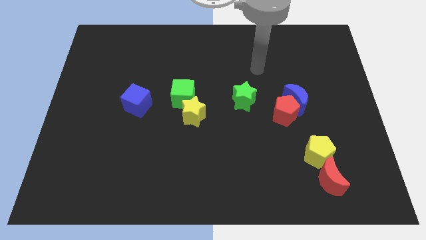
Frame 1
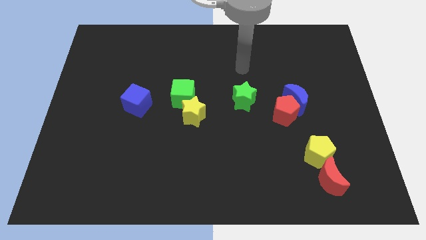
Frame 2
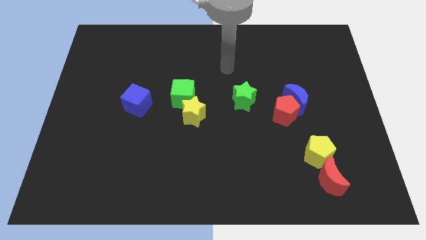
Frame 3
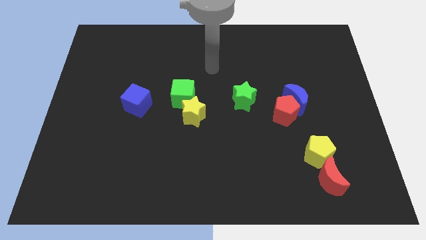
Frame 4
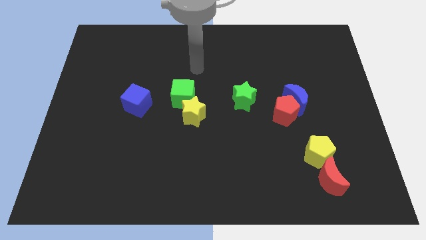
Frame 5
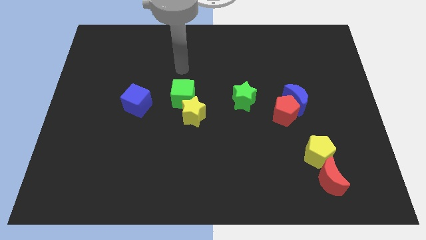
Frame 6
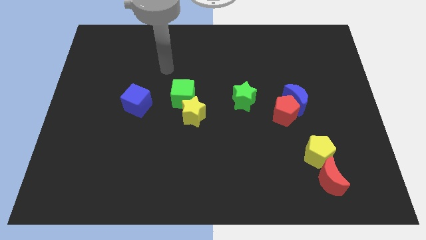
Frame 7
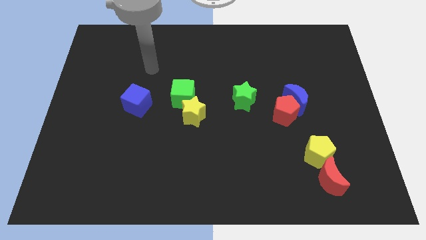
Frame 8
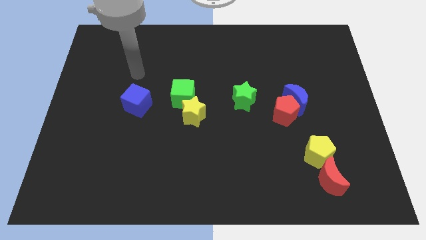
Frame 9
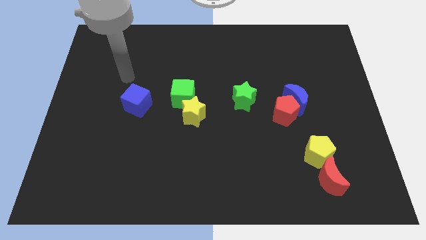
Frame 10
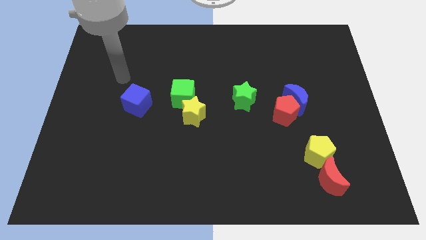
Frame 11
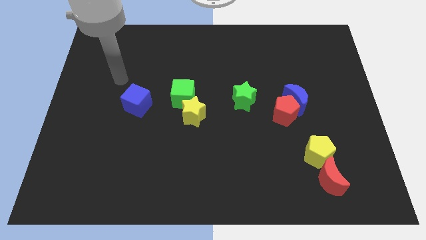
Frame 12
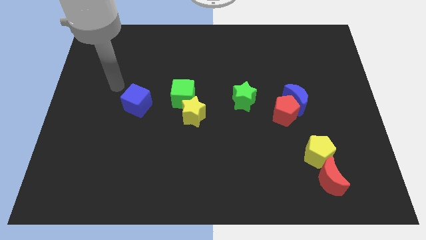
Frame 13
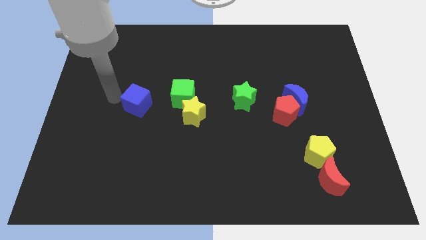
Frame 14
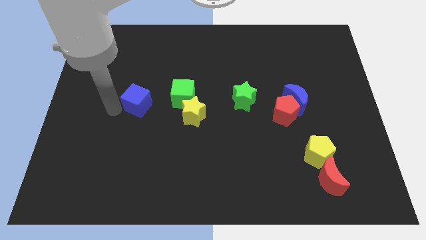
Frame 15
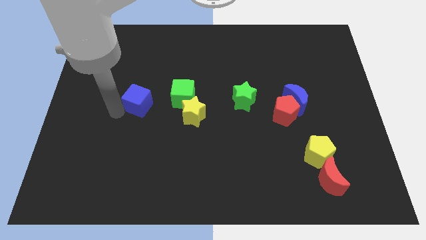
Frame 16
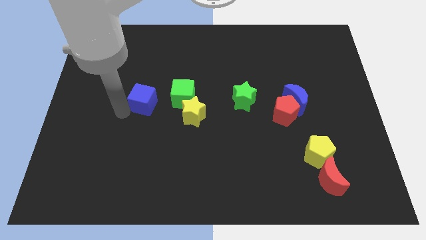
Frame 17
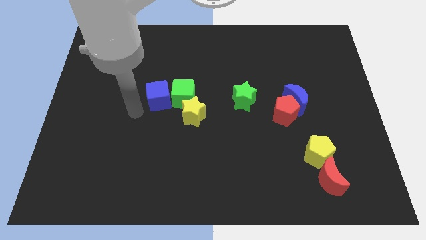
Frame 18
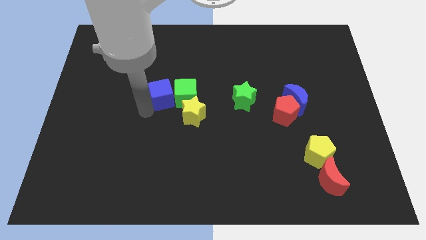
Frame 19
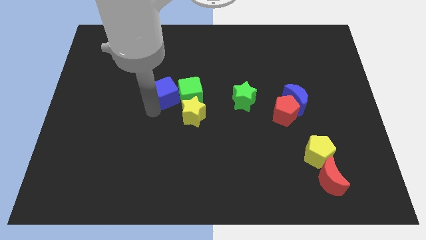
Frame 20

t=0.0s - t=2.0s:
push the blue cube into the green cube

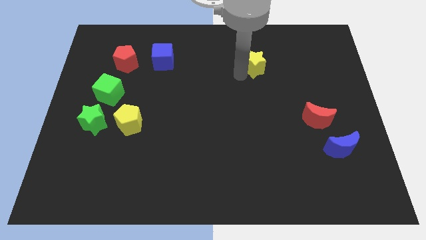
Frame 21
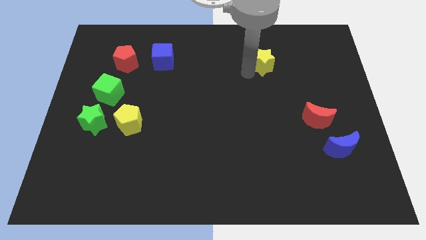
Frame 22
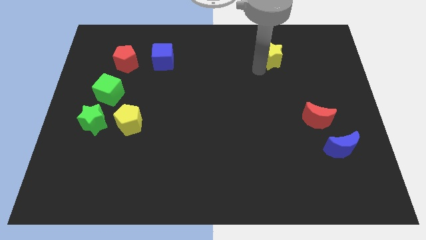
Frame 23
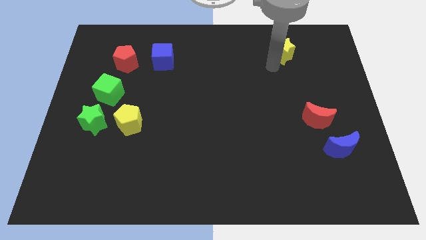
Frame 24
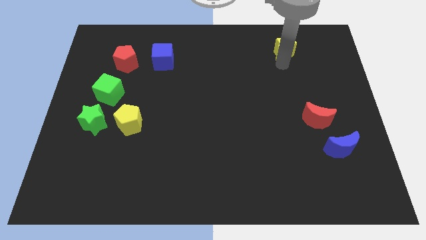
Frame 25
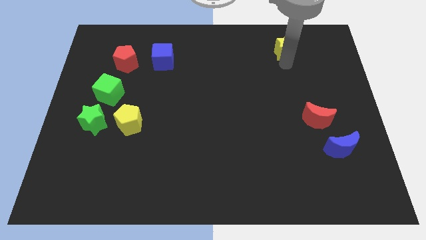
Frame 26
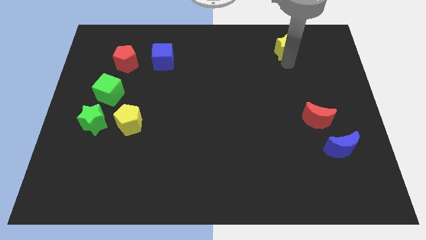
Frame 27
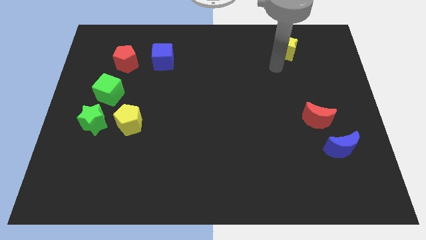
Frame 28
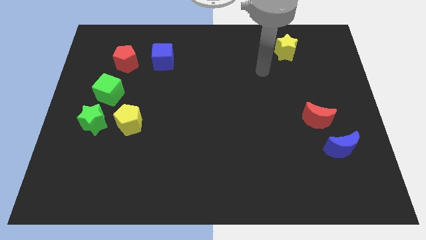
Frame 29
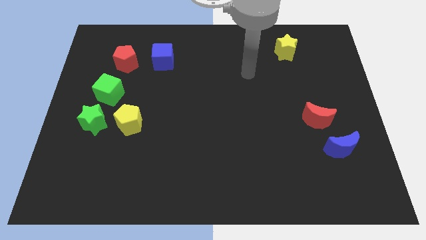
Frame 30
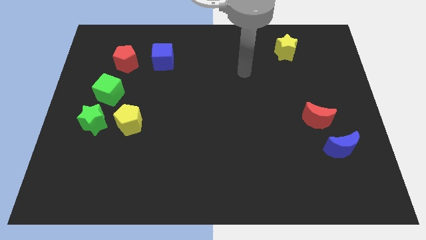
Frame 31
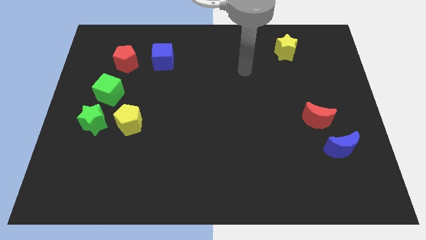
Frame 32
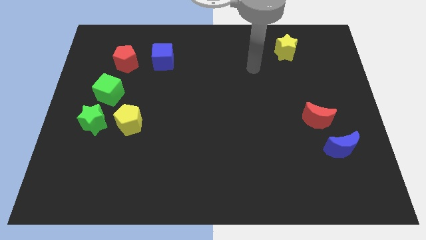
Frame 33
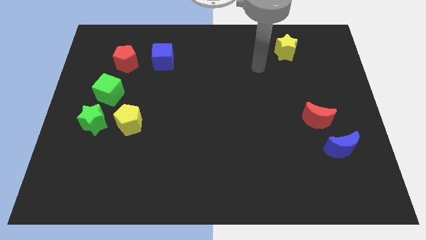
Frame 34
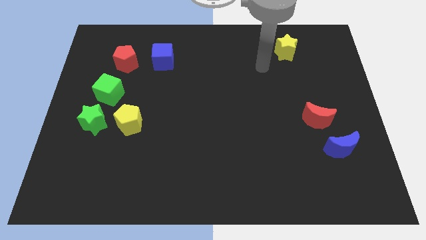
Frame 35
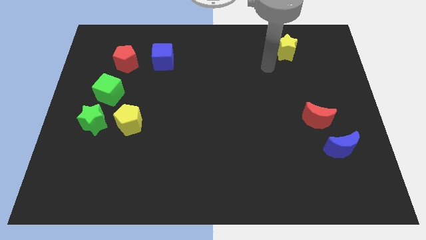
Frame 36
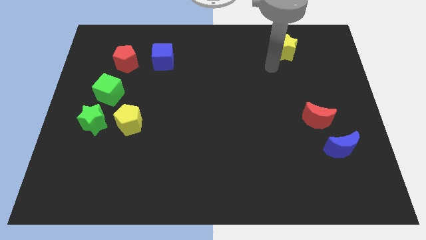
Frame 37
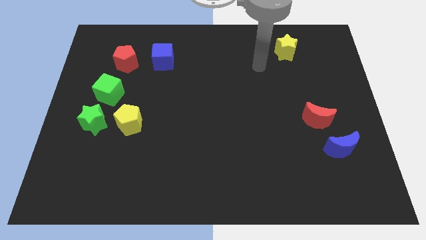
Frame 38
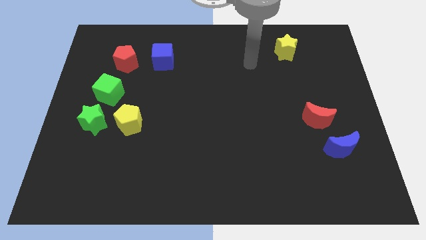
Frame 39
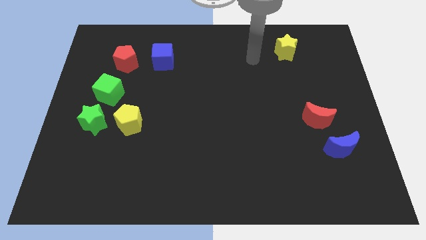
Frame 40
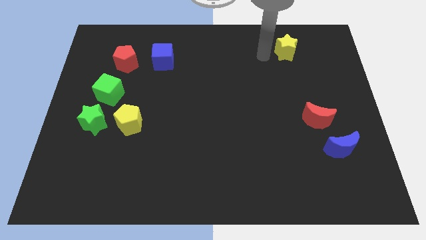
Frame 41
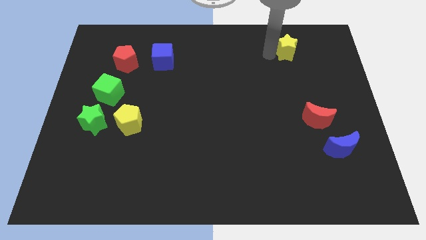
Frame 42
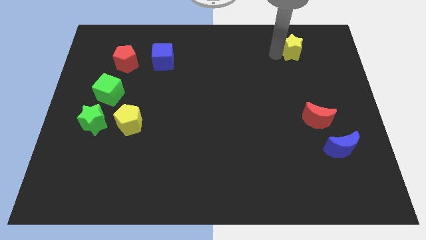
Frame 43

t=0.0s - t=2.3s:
push the yellow star to the top

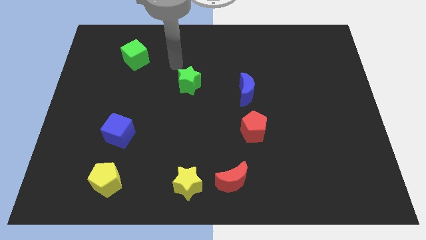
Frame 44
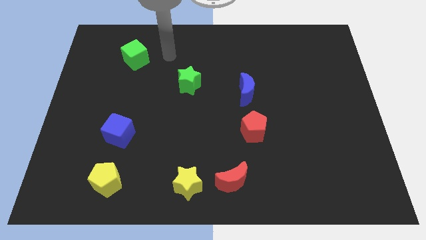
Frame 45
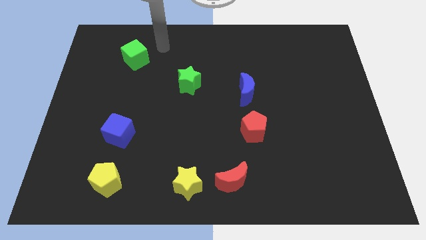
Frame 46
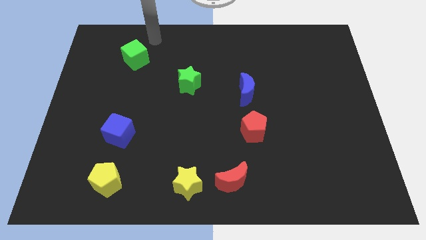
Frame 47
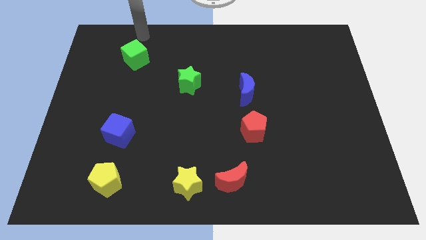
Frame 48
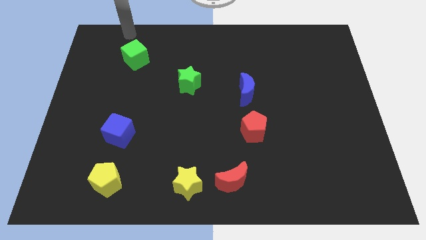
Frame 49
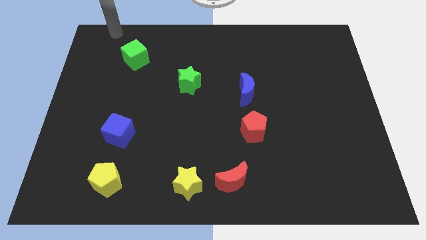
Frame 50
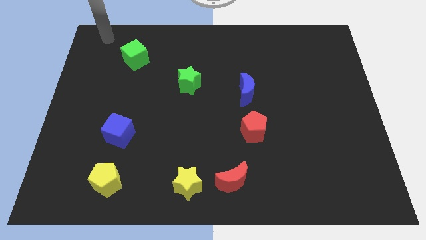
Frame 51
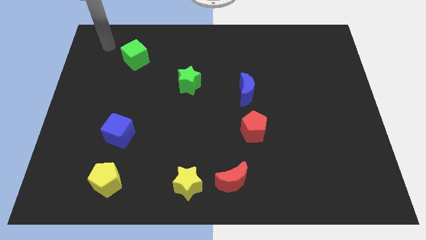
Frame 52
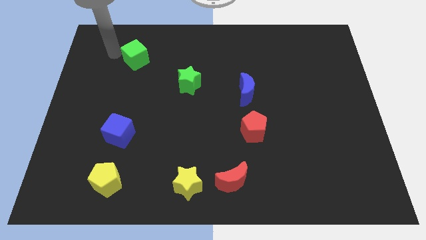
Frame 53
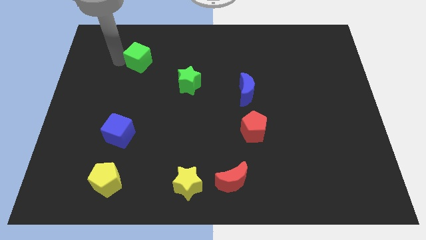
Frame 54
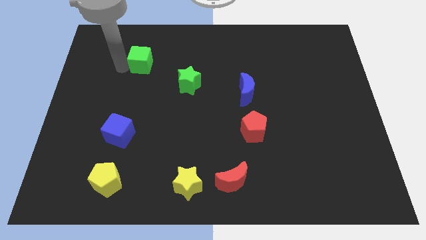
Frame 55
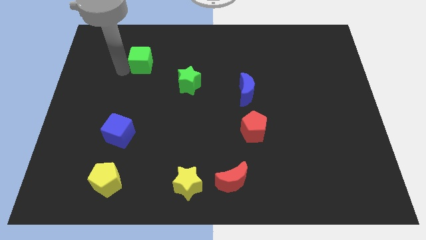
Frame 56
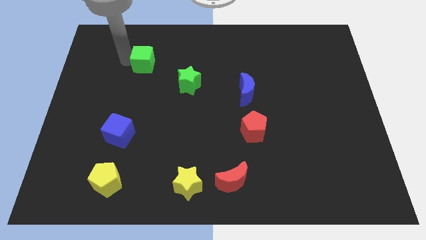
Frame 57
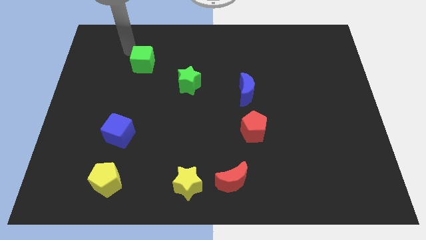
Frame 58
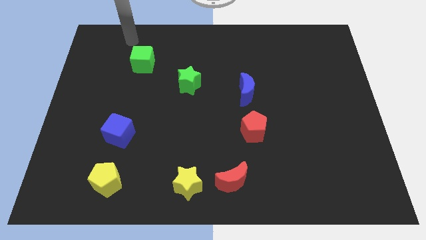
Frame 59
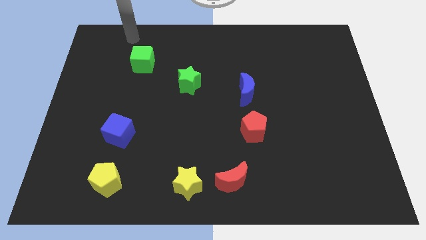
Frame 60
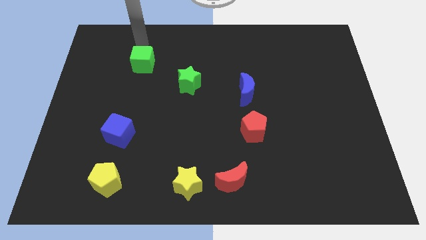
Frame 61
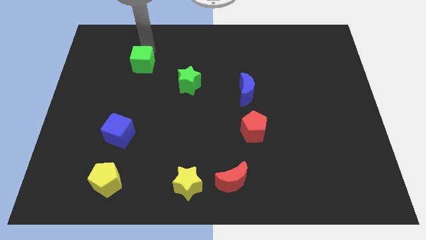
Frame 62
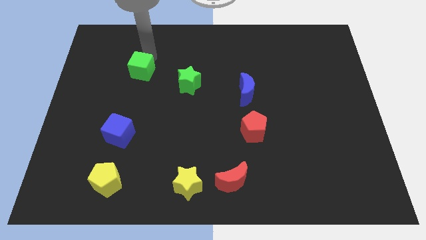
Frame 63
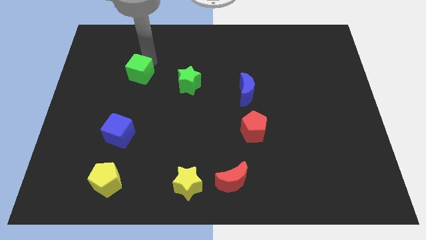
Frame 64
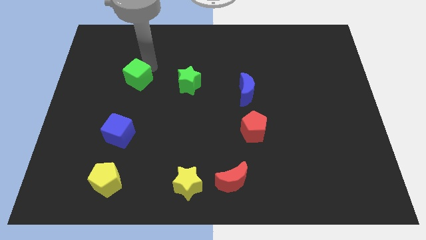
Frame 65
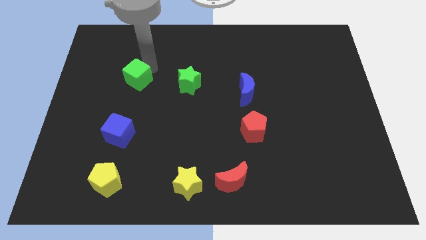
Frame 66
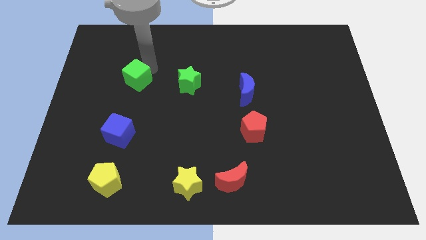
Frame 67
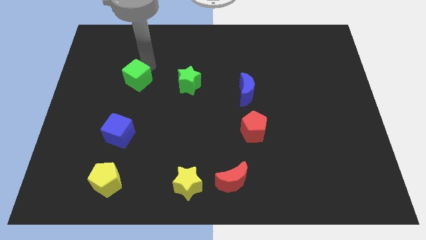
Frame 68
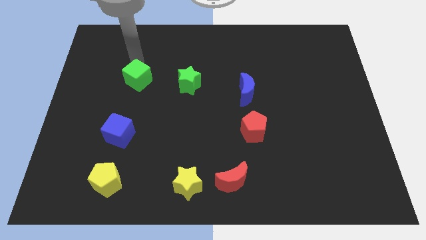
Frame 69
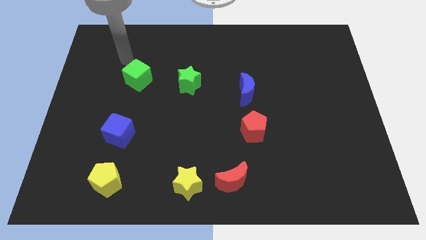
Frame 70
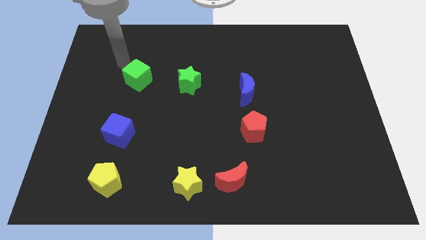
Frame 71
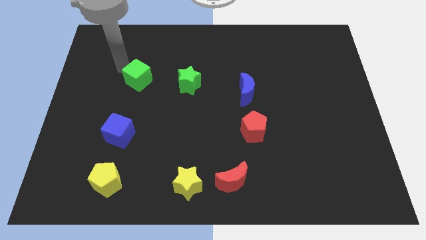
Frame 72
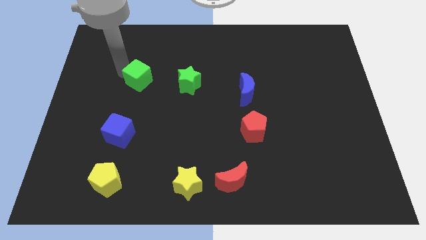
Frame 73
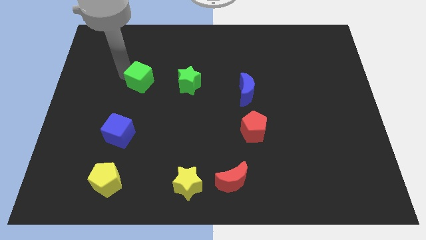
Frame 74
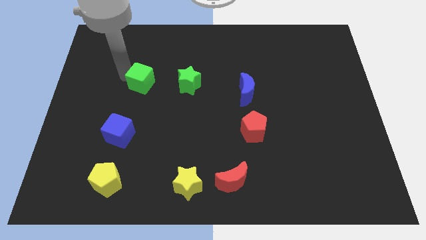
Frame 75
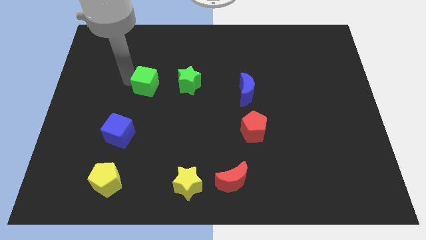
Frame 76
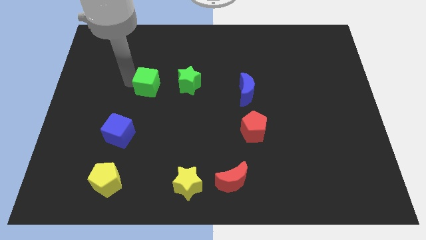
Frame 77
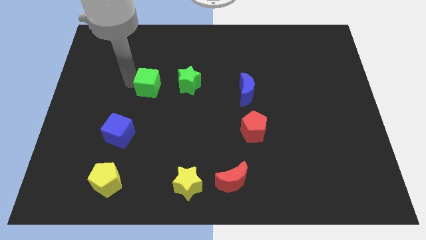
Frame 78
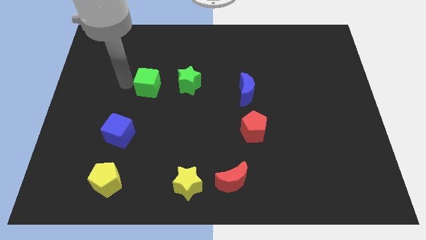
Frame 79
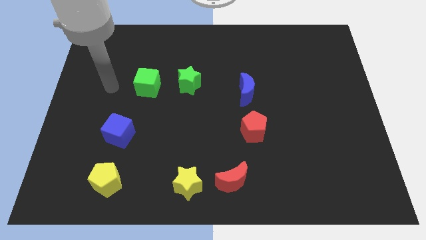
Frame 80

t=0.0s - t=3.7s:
place green cube to the left of green star

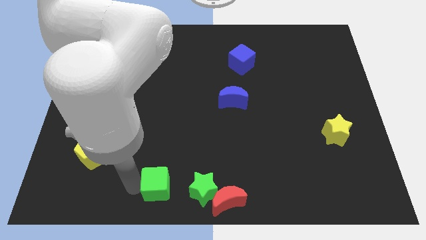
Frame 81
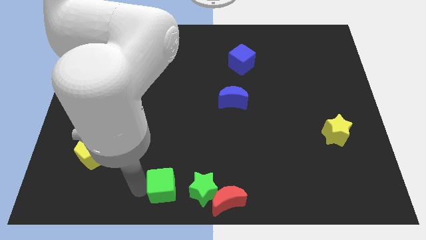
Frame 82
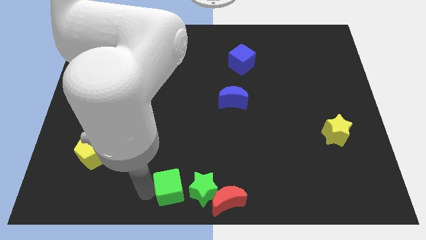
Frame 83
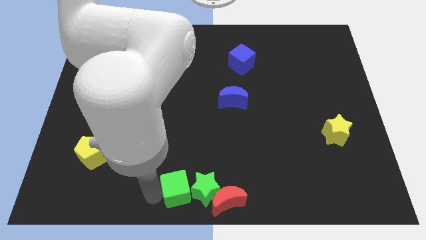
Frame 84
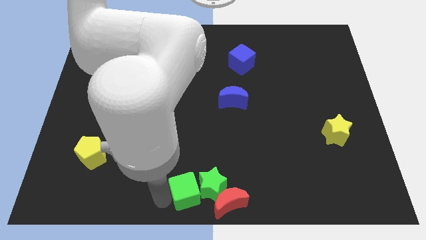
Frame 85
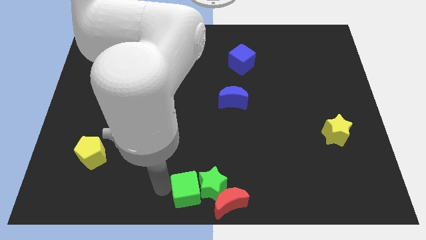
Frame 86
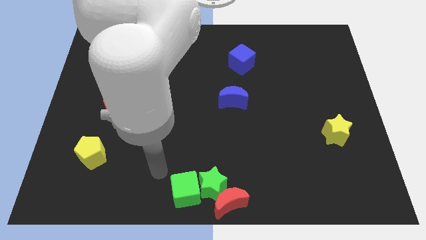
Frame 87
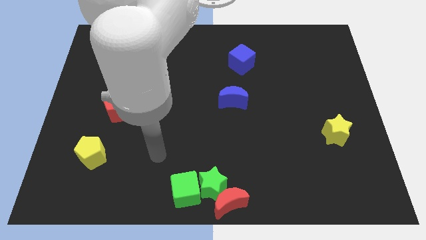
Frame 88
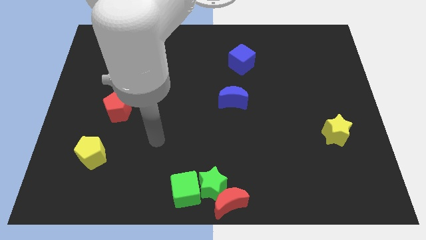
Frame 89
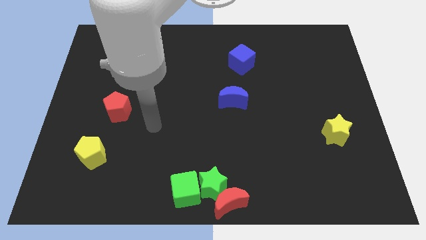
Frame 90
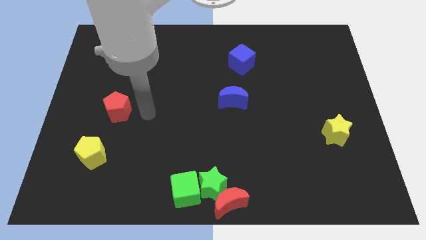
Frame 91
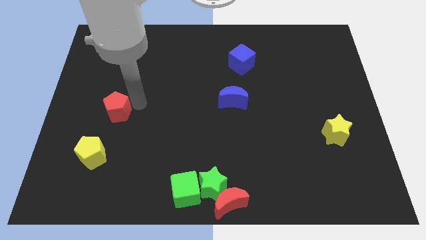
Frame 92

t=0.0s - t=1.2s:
put the green cube into the green star
